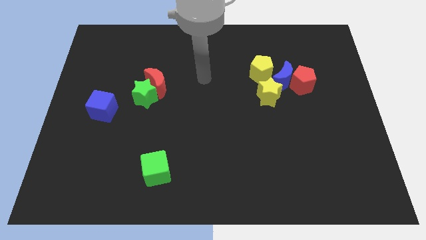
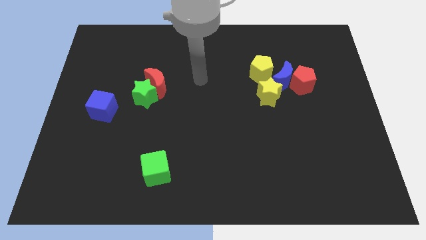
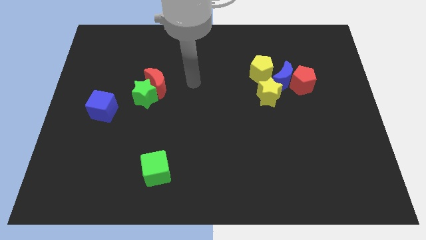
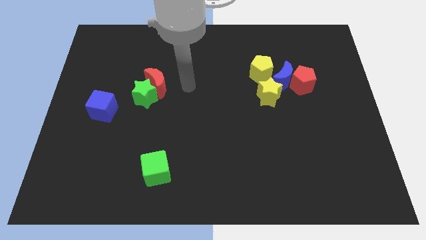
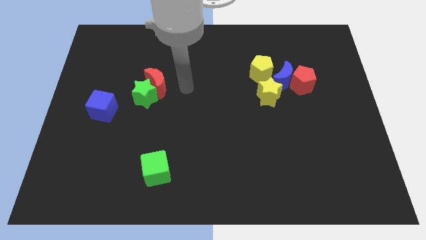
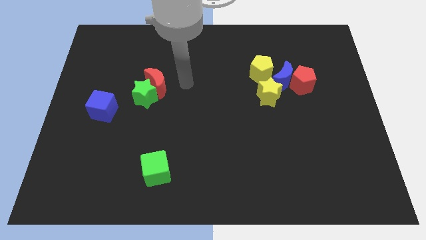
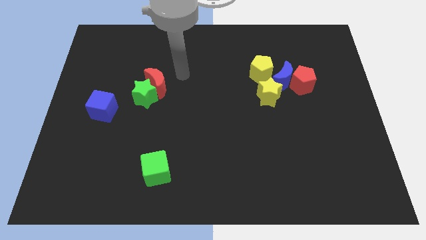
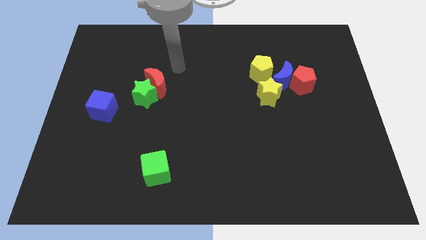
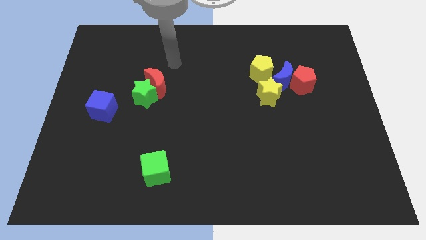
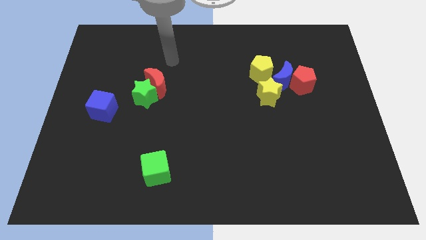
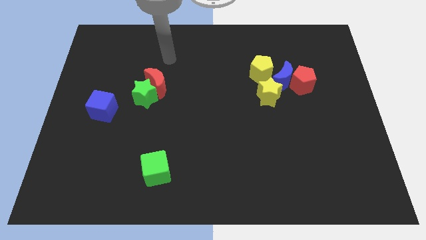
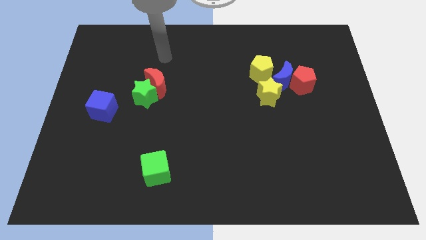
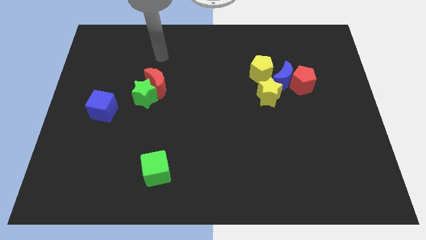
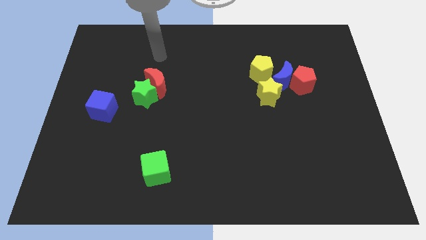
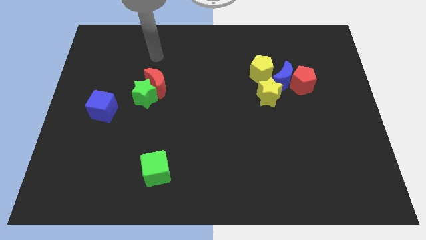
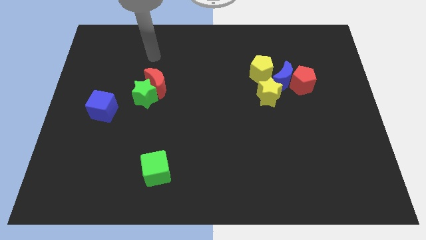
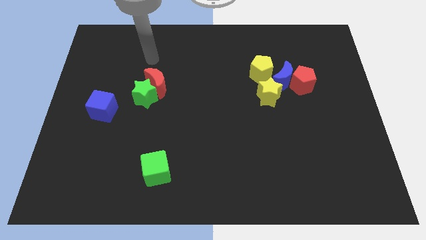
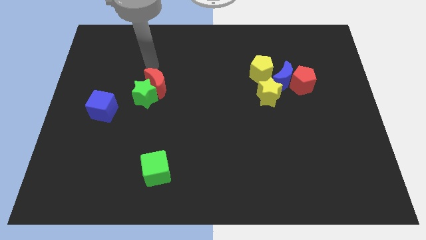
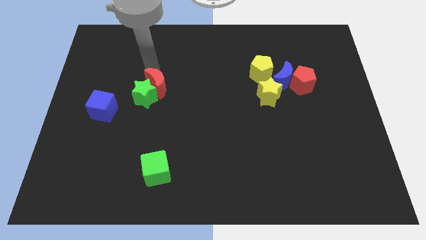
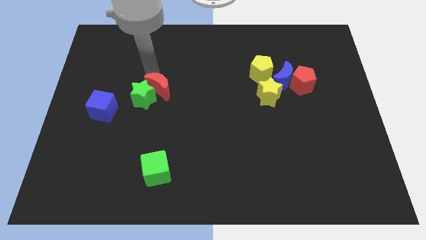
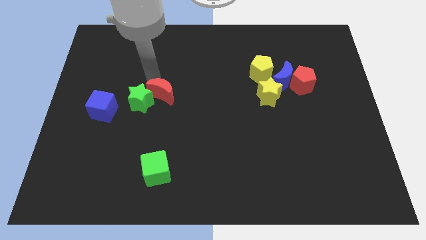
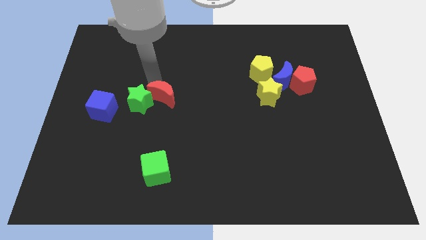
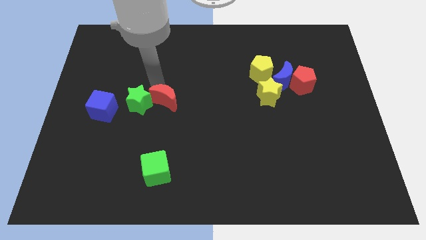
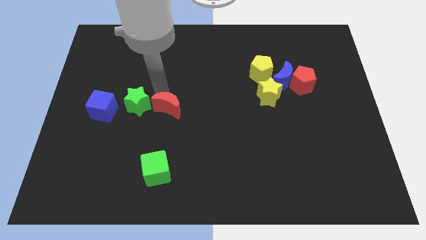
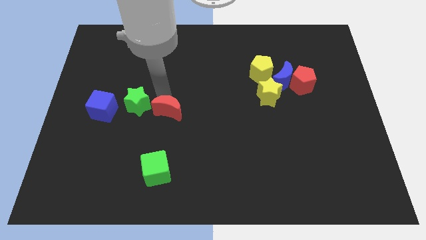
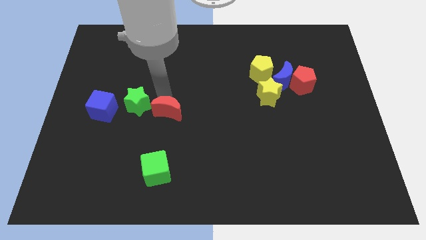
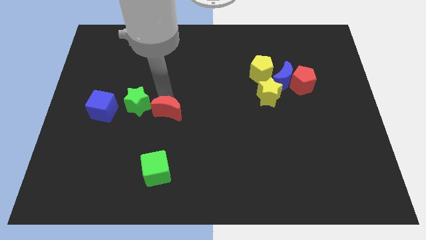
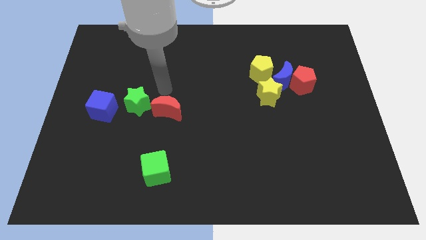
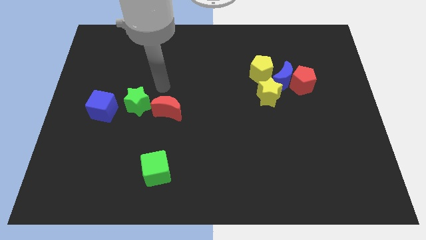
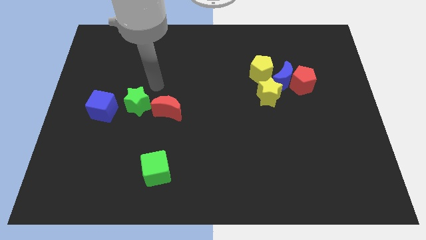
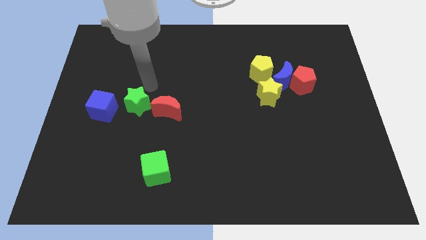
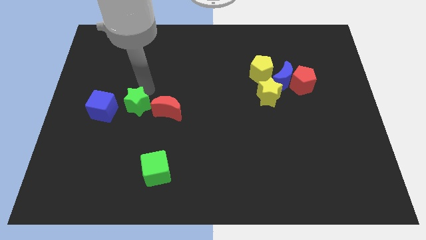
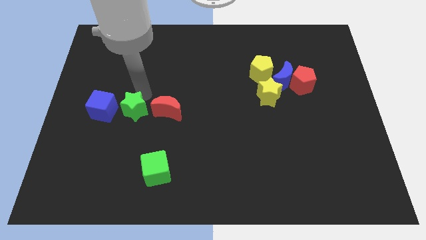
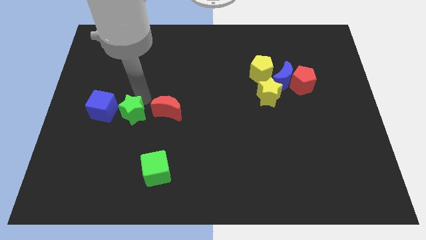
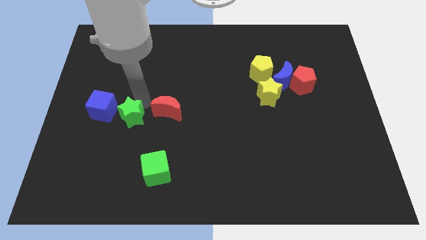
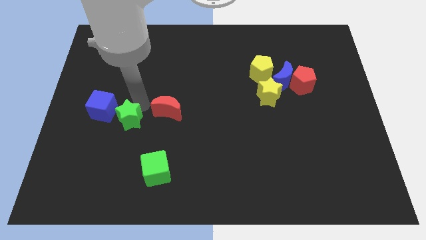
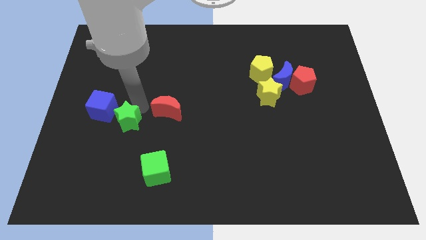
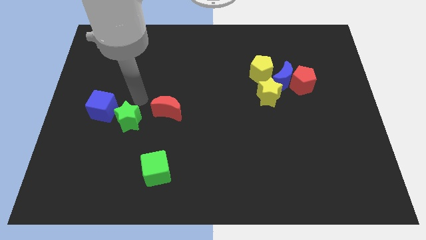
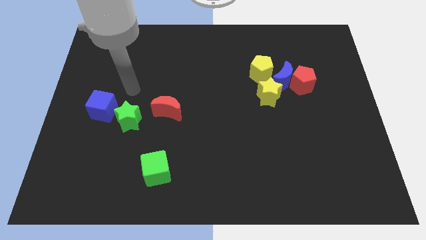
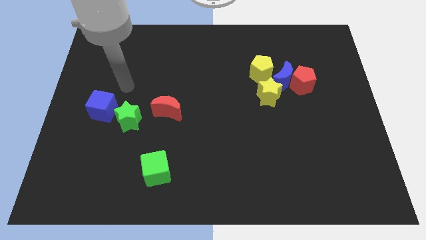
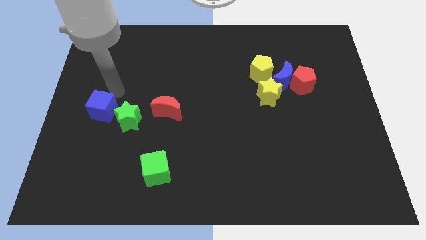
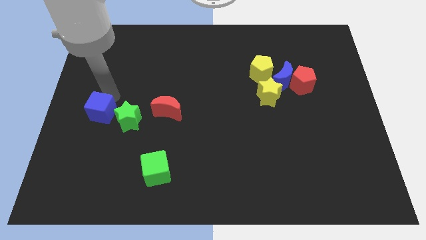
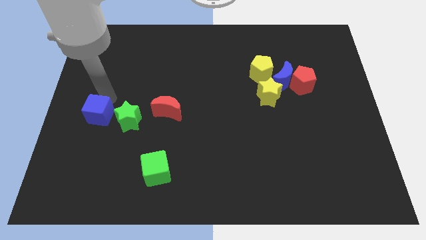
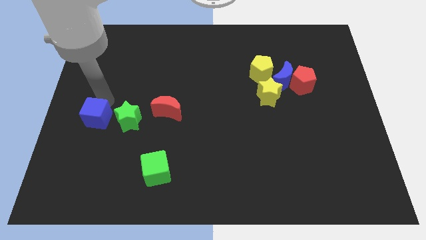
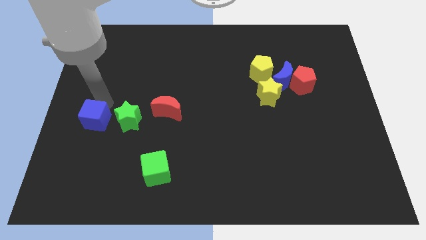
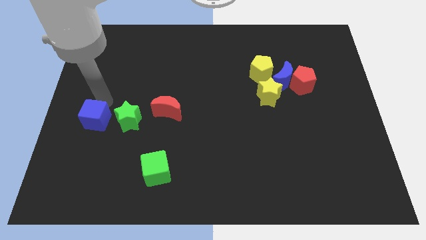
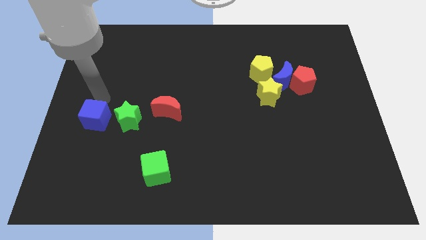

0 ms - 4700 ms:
place green star blue cube and the red crescent in a line

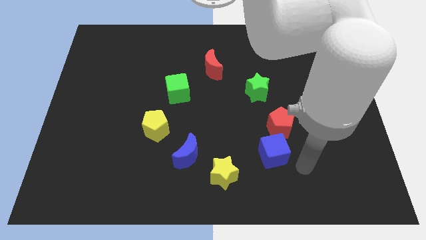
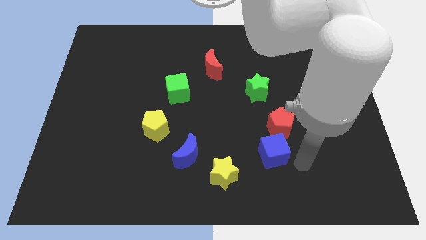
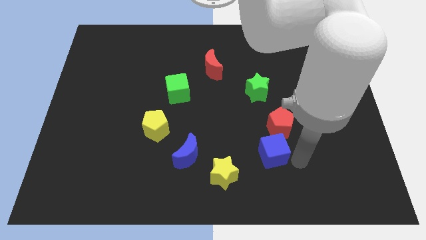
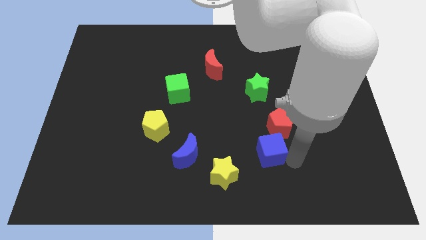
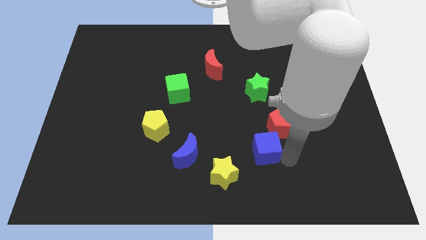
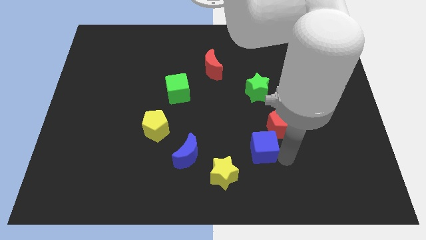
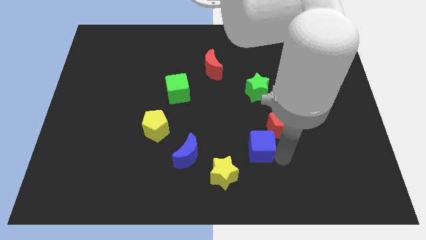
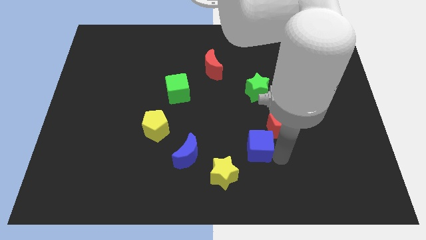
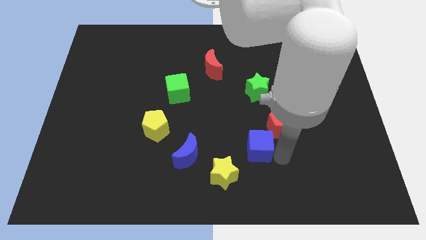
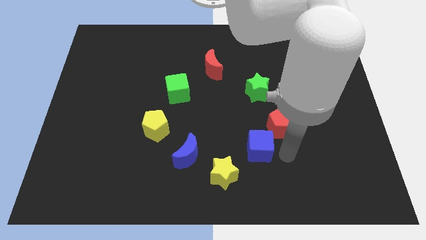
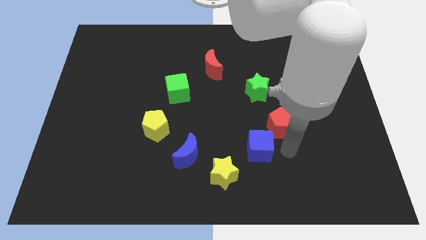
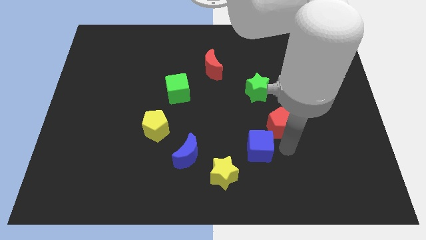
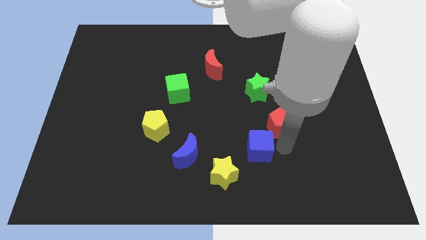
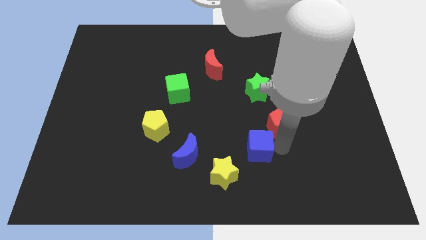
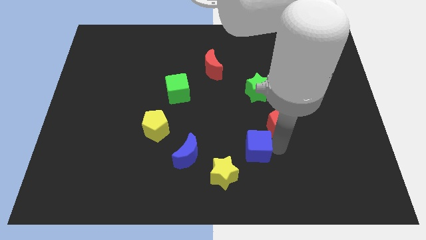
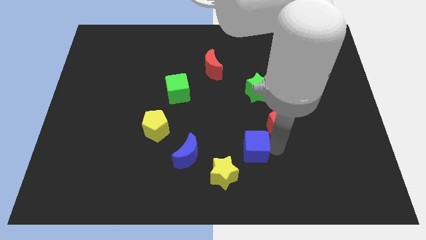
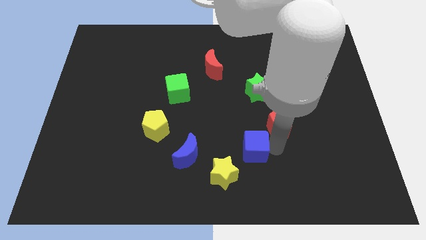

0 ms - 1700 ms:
place the blue cube between the yellow star and red pentagon

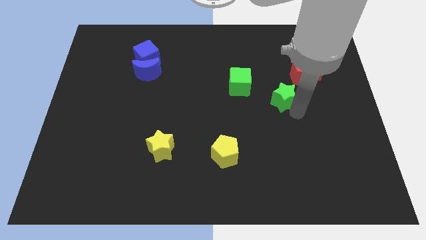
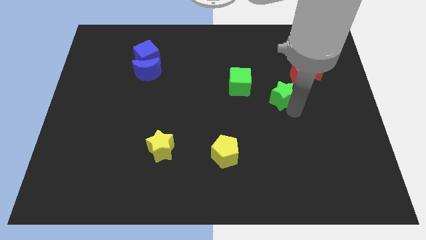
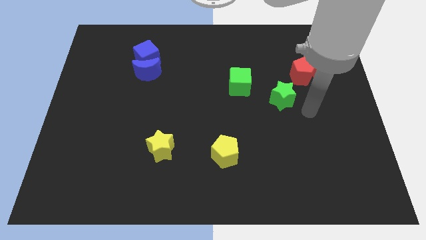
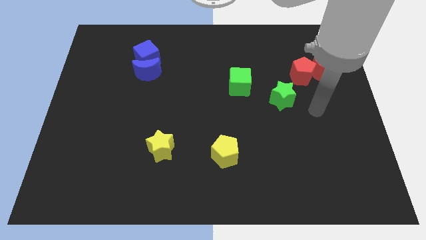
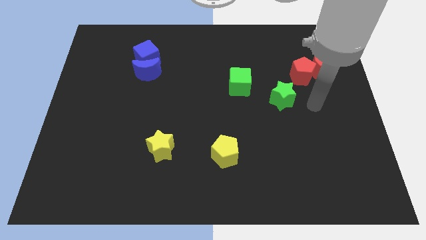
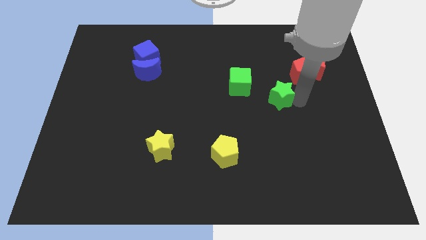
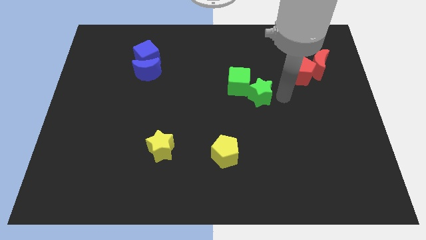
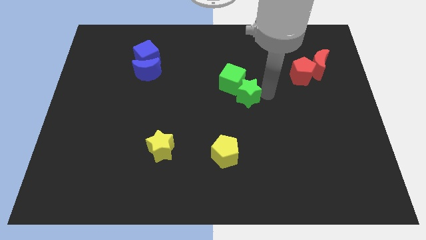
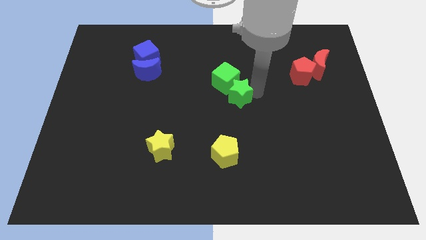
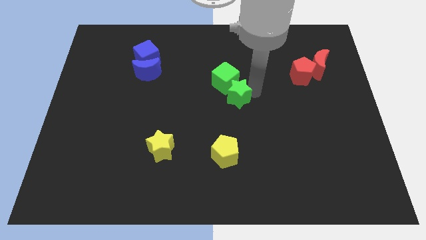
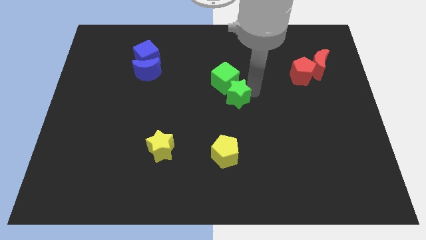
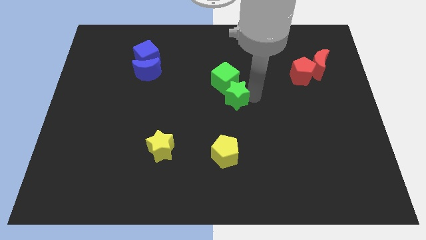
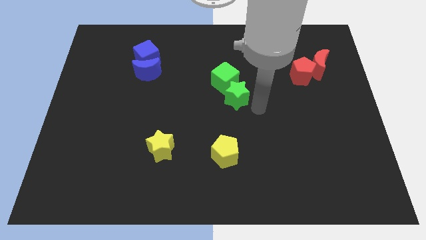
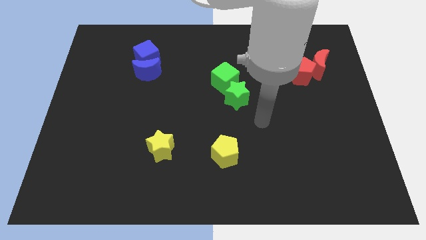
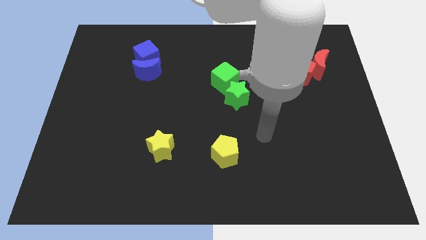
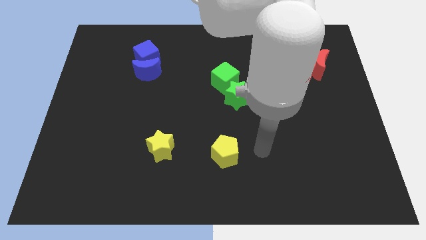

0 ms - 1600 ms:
push the green star into the green cube

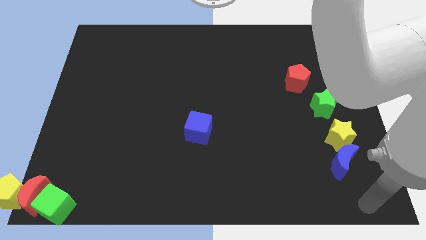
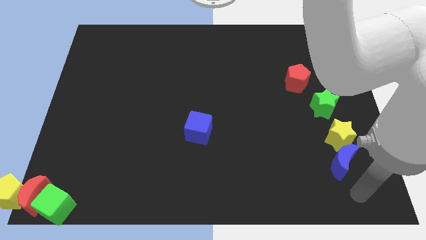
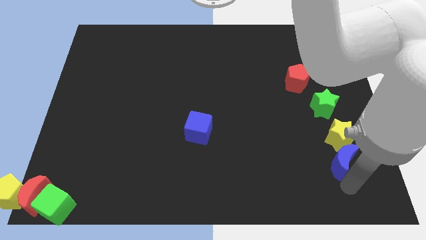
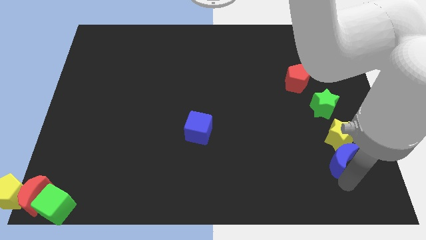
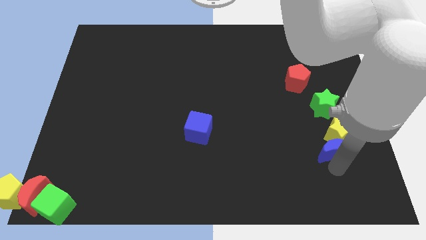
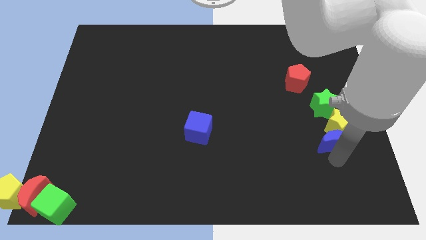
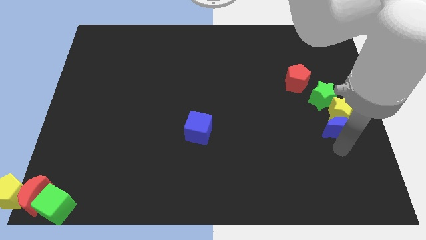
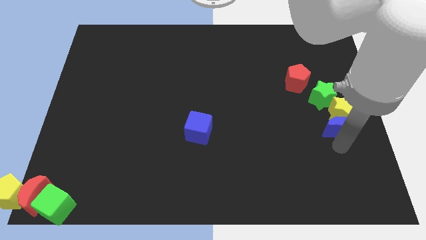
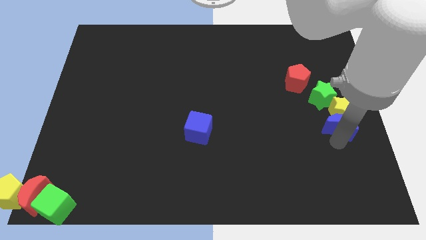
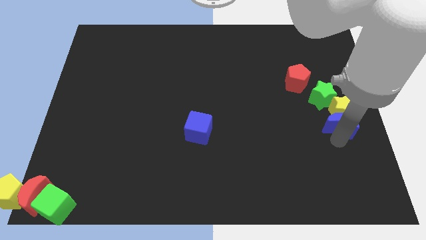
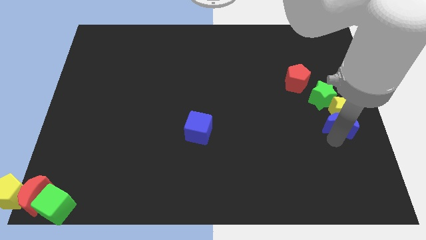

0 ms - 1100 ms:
put the blue crescent parallel to the blue cube
